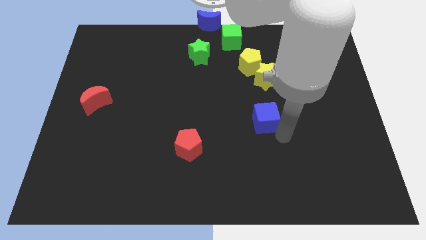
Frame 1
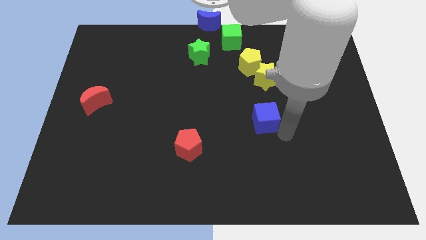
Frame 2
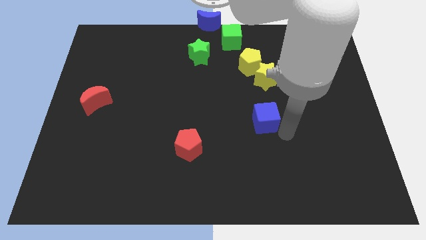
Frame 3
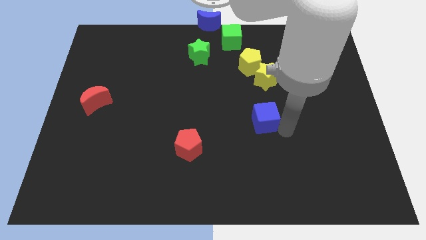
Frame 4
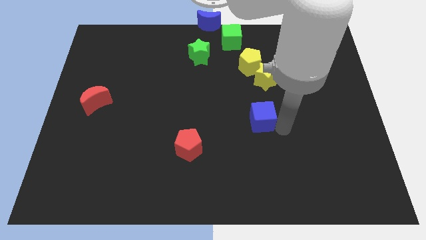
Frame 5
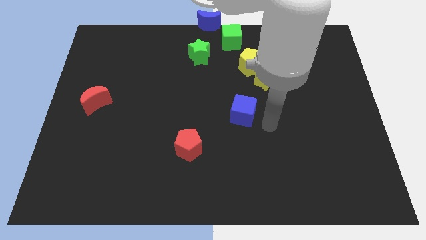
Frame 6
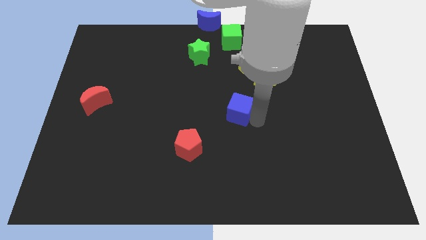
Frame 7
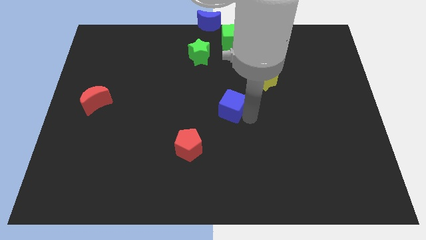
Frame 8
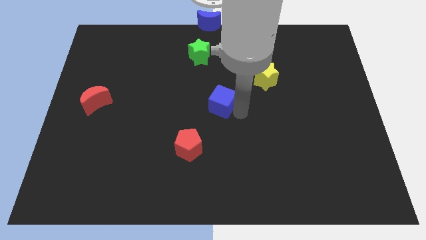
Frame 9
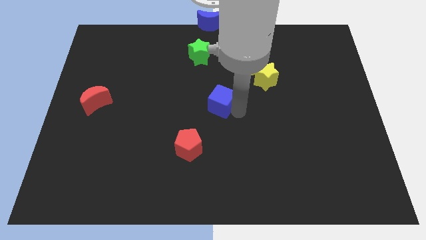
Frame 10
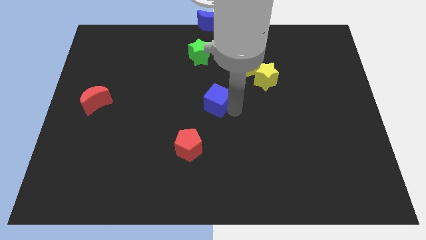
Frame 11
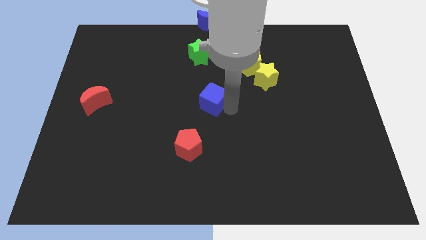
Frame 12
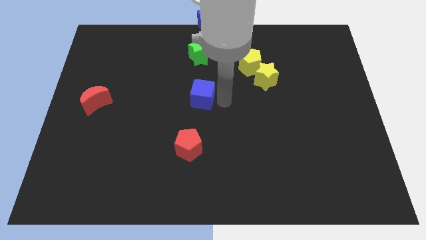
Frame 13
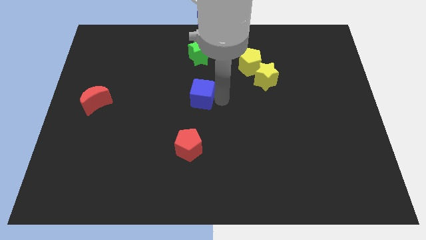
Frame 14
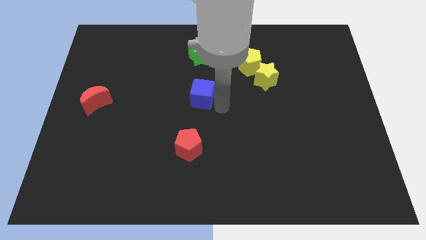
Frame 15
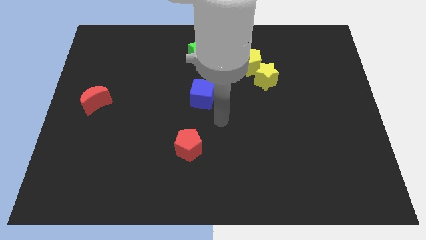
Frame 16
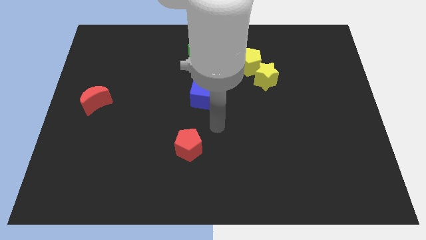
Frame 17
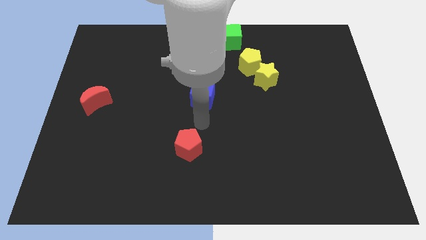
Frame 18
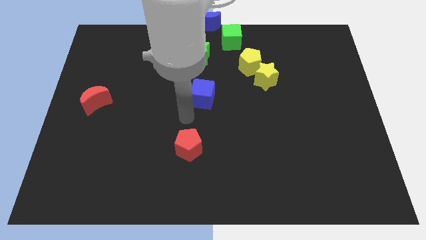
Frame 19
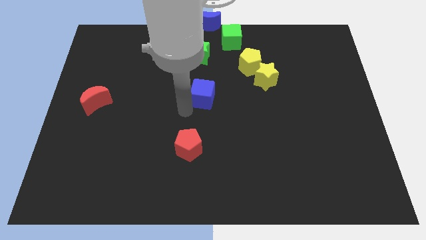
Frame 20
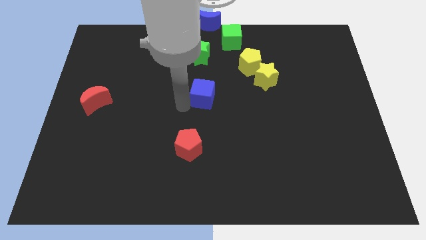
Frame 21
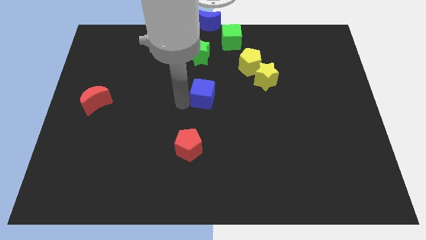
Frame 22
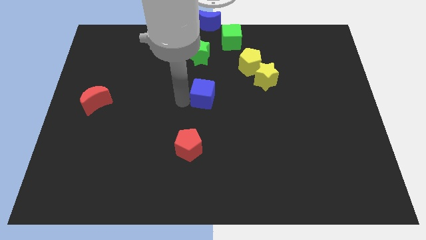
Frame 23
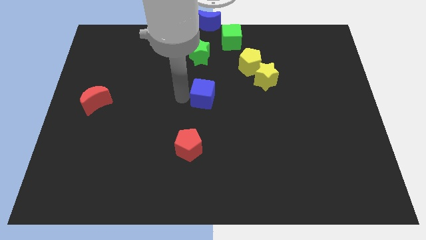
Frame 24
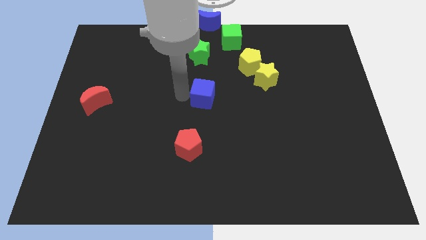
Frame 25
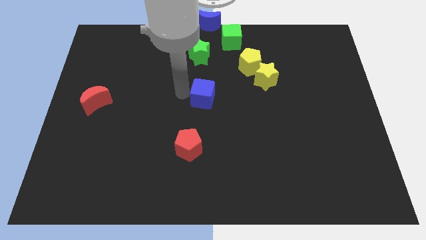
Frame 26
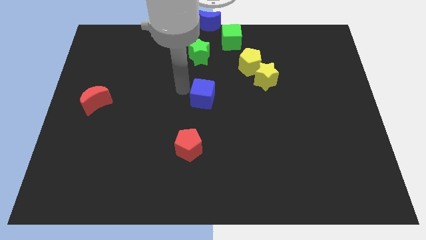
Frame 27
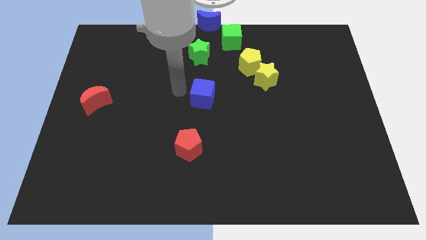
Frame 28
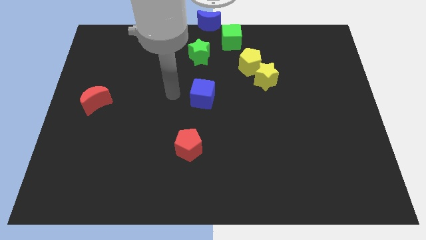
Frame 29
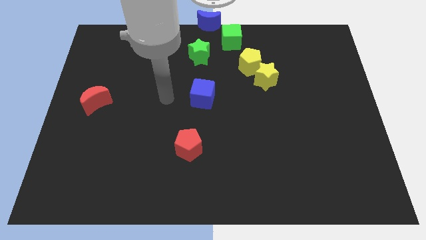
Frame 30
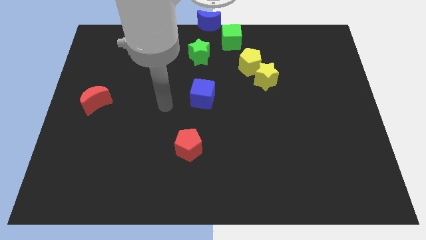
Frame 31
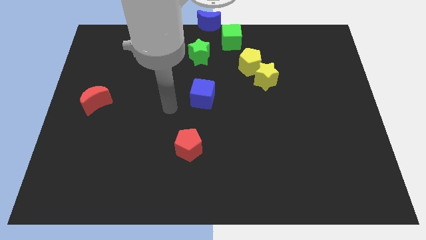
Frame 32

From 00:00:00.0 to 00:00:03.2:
move the blue cube below the green star

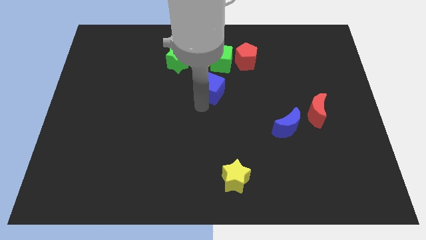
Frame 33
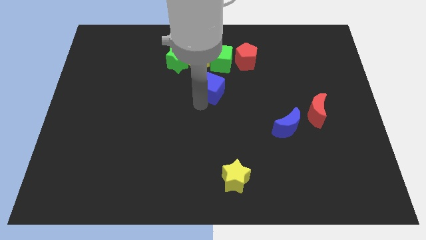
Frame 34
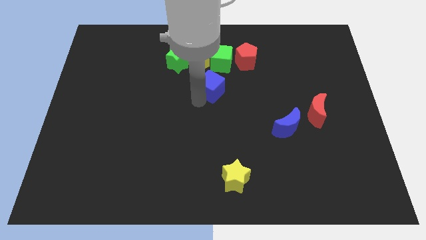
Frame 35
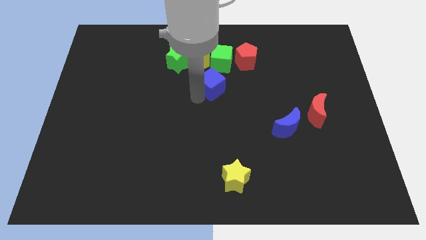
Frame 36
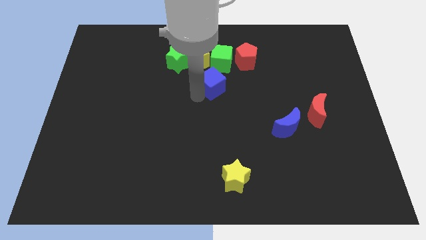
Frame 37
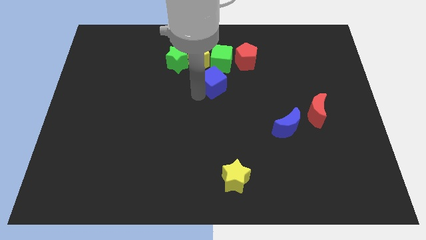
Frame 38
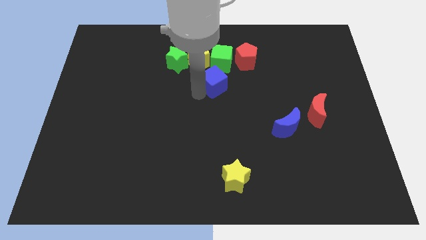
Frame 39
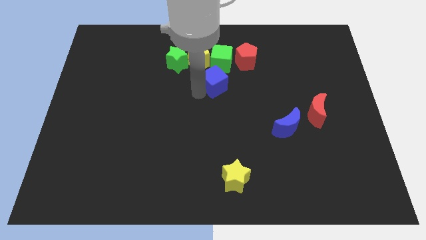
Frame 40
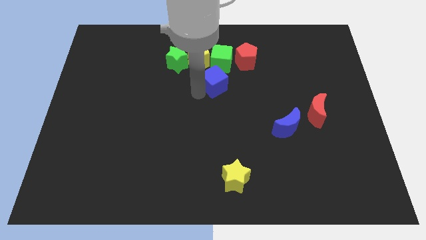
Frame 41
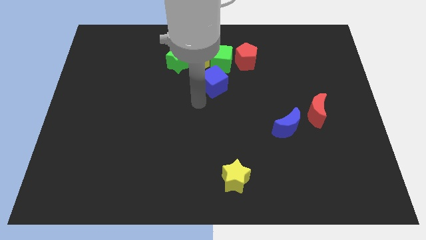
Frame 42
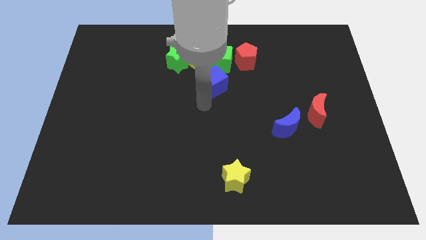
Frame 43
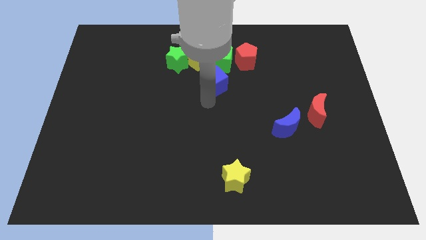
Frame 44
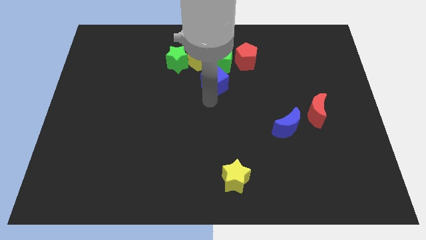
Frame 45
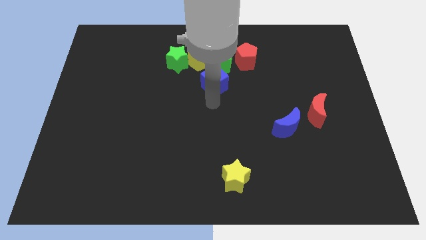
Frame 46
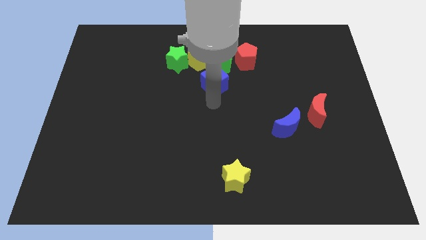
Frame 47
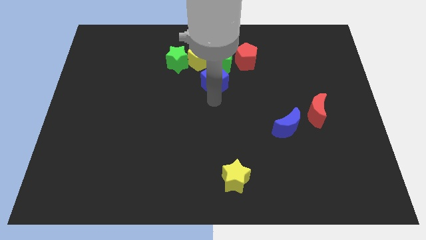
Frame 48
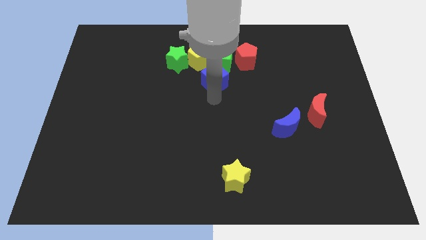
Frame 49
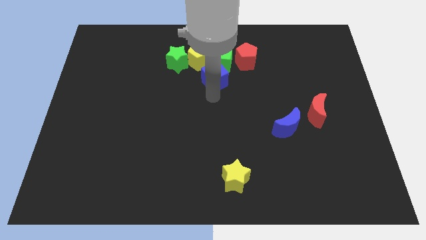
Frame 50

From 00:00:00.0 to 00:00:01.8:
move blue cube close to the green cube

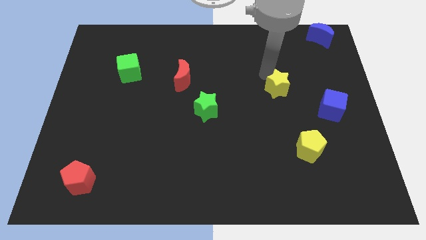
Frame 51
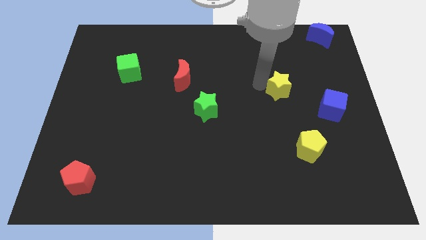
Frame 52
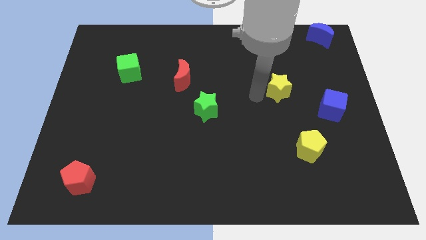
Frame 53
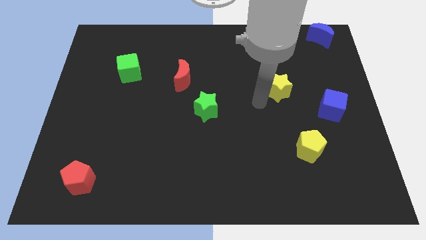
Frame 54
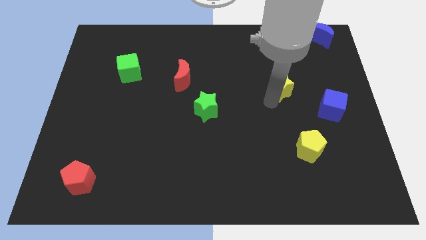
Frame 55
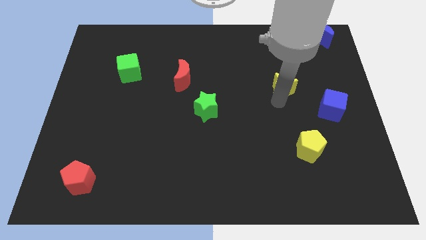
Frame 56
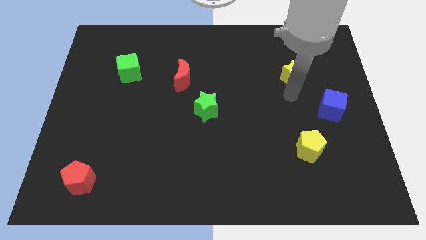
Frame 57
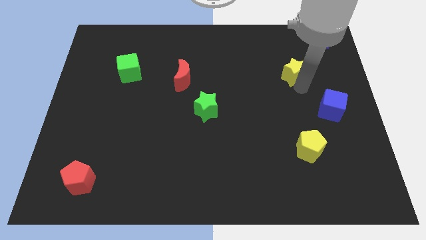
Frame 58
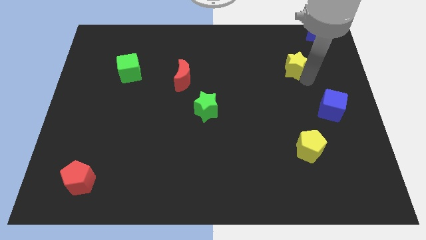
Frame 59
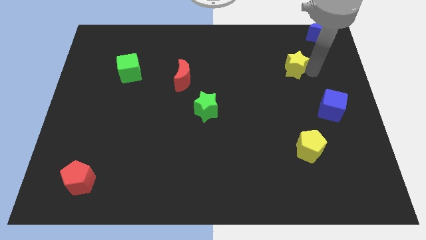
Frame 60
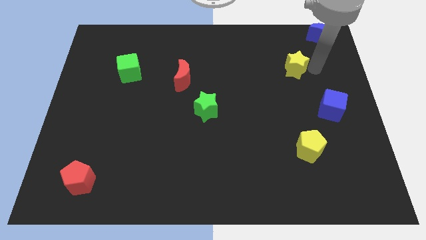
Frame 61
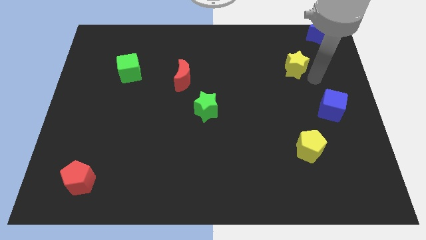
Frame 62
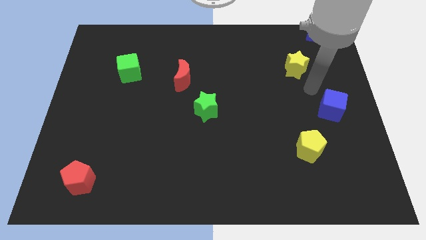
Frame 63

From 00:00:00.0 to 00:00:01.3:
move yellow star towards blue crescent

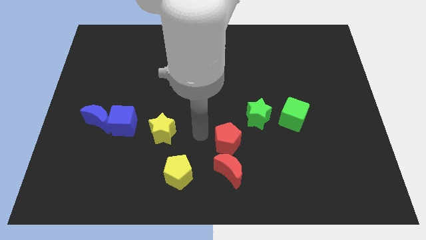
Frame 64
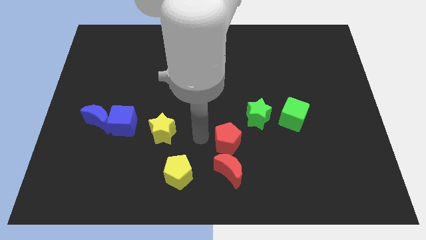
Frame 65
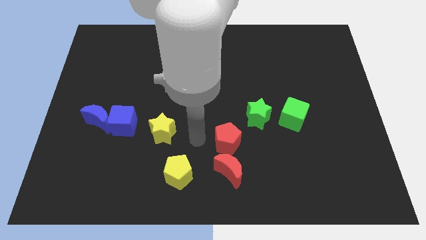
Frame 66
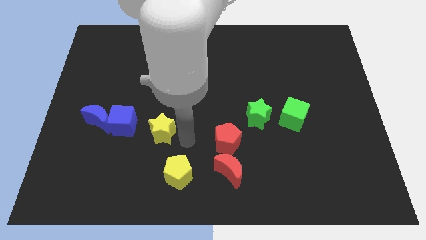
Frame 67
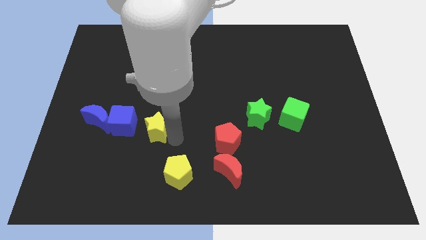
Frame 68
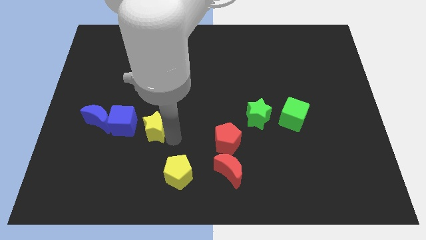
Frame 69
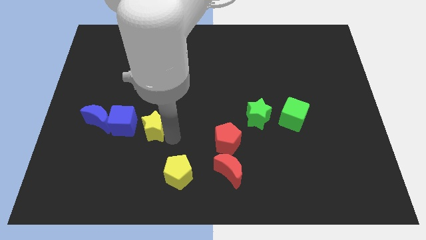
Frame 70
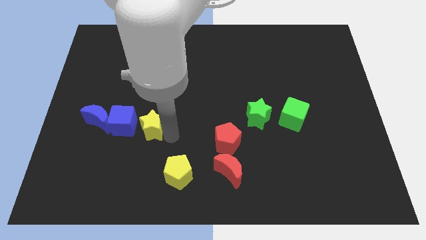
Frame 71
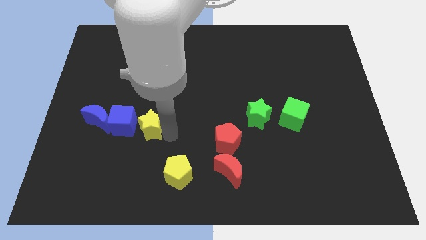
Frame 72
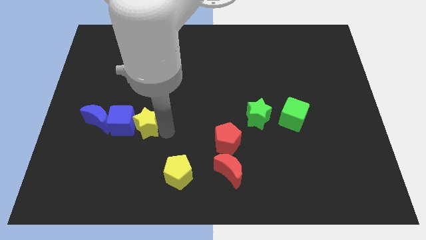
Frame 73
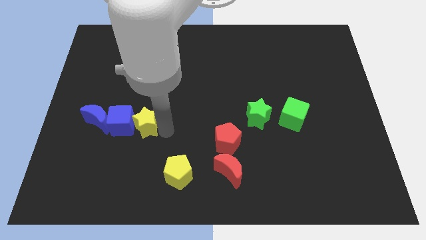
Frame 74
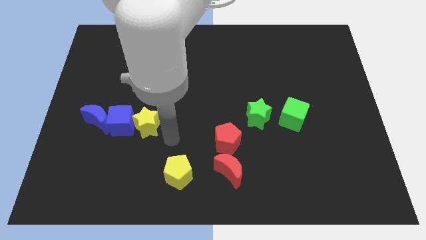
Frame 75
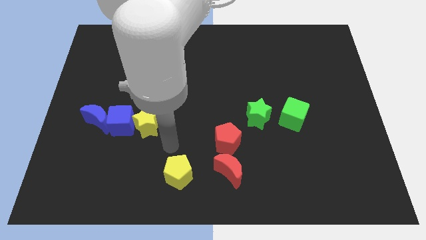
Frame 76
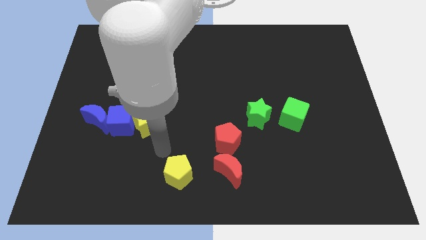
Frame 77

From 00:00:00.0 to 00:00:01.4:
push the yellow star right side of the blue cube

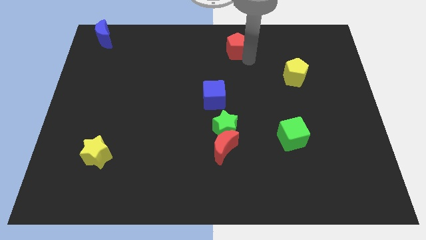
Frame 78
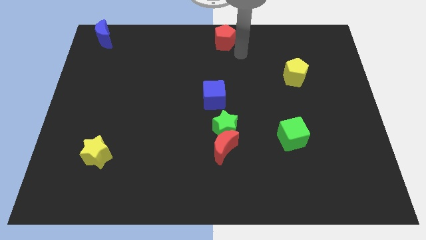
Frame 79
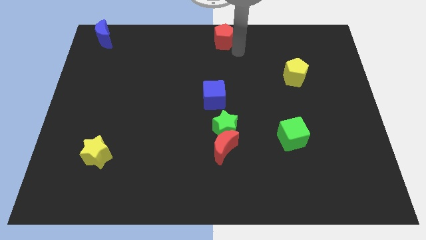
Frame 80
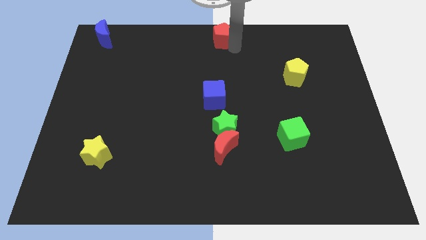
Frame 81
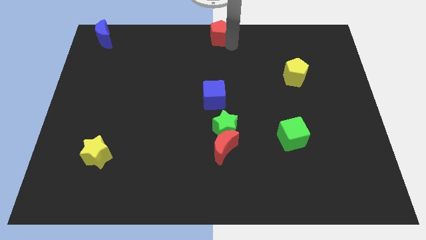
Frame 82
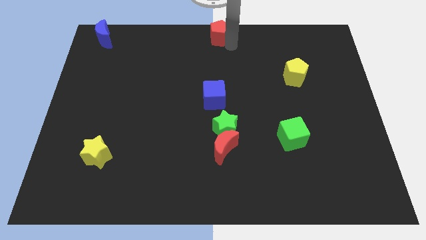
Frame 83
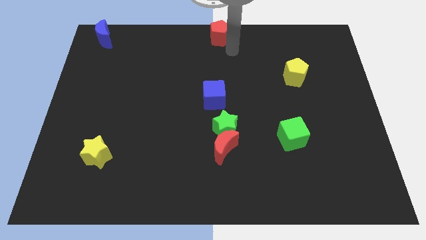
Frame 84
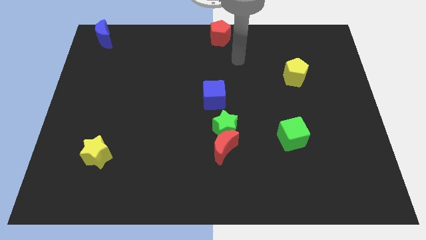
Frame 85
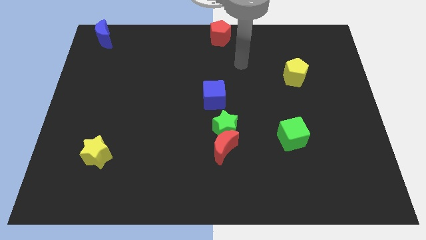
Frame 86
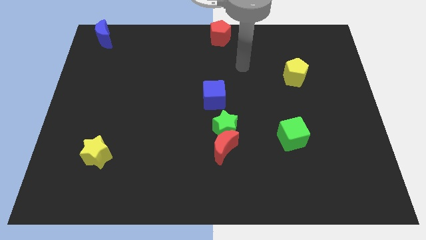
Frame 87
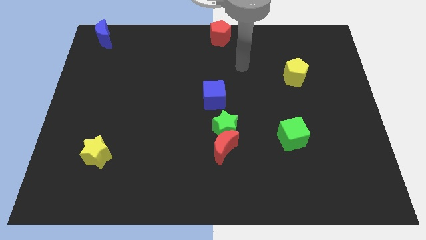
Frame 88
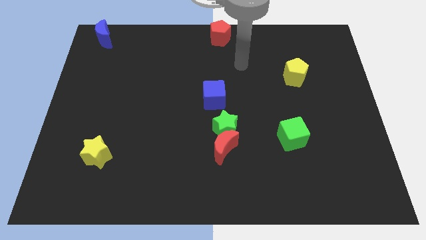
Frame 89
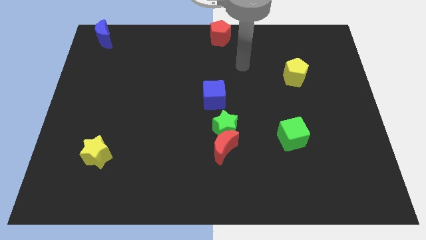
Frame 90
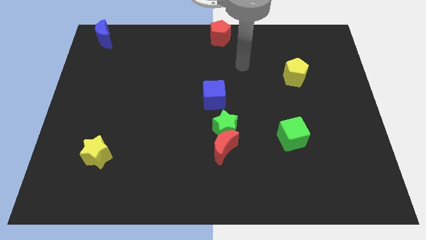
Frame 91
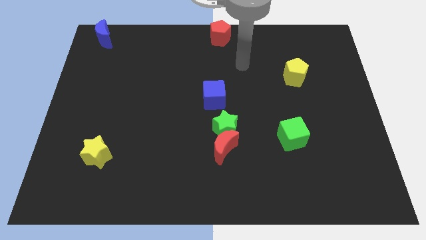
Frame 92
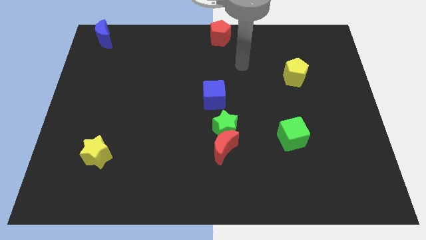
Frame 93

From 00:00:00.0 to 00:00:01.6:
place the red pentagon at the top center of the board
